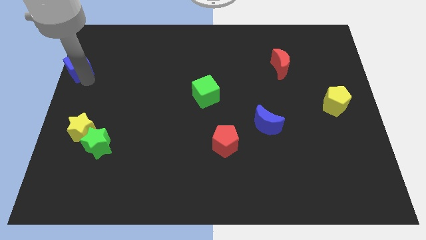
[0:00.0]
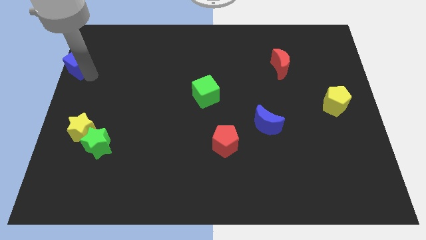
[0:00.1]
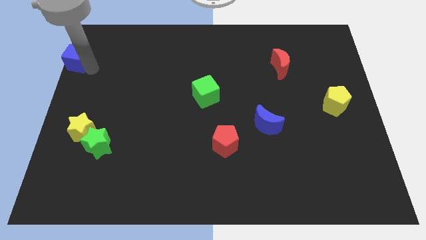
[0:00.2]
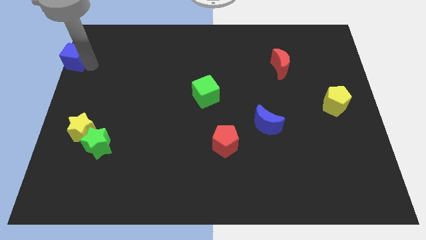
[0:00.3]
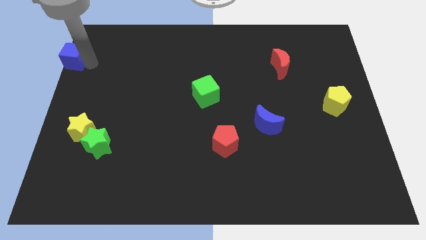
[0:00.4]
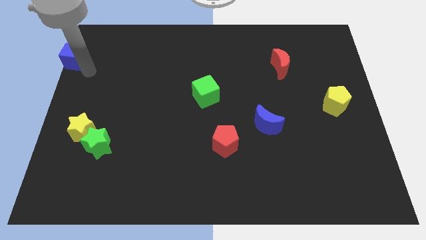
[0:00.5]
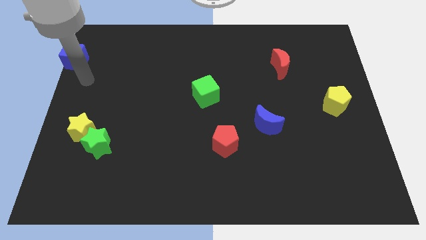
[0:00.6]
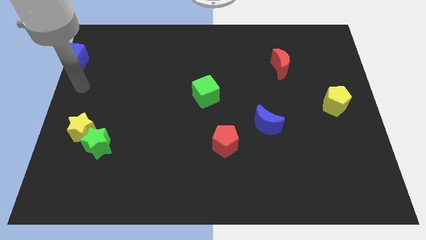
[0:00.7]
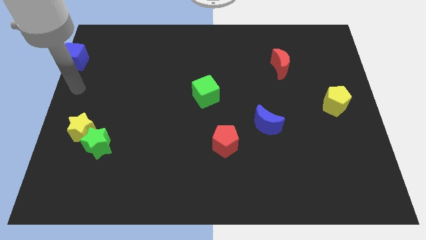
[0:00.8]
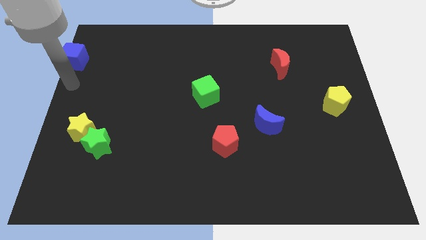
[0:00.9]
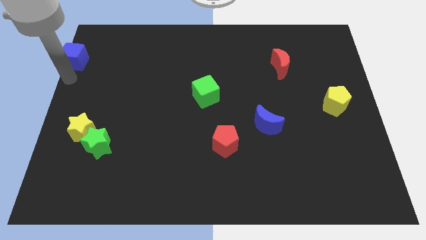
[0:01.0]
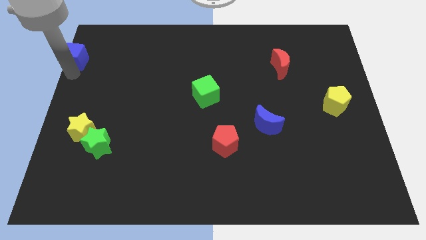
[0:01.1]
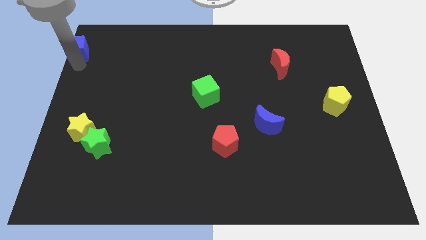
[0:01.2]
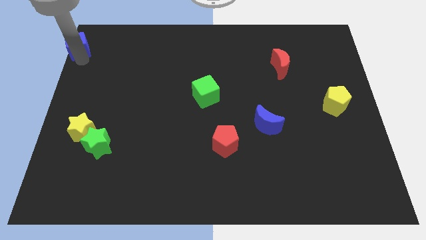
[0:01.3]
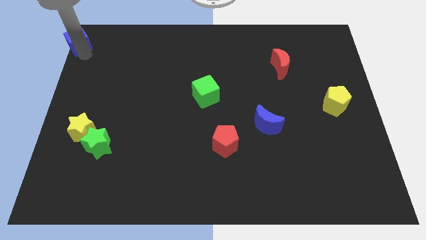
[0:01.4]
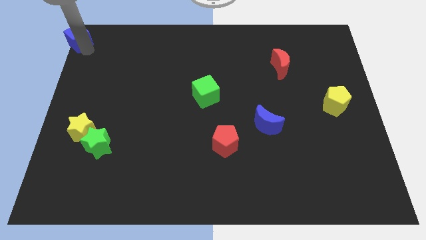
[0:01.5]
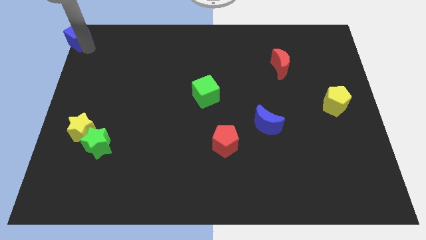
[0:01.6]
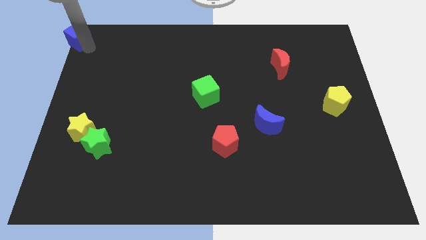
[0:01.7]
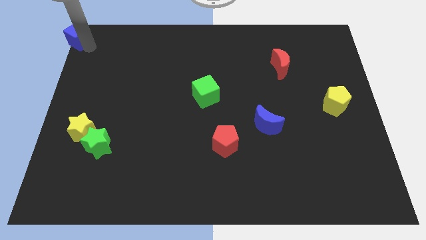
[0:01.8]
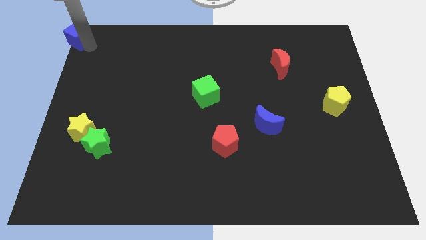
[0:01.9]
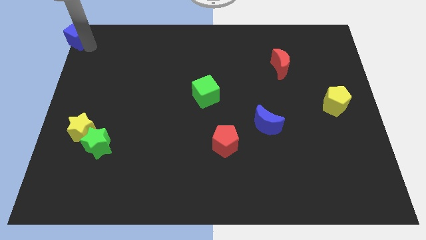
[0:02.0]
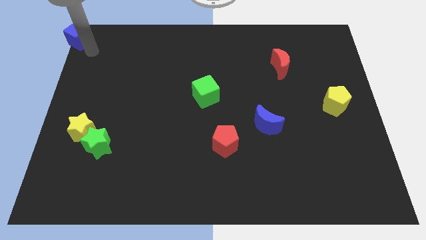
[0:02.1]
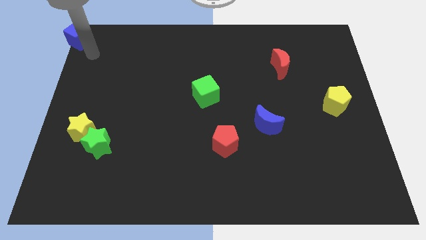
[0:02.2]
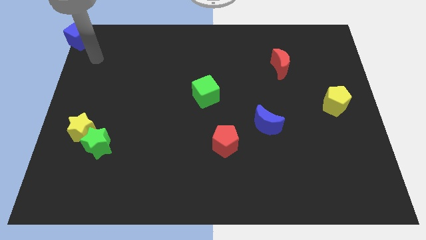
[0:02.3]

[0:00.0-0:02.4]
place the blue cube at the top left corner of the board

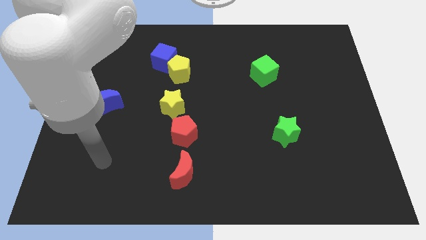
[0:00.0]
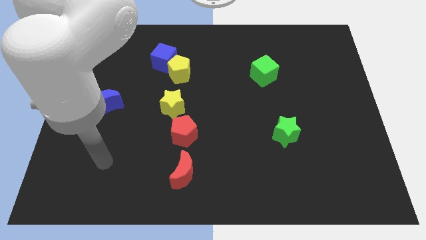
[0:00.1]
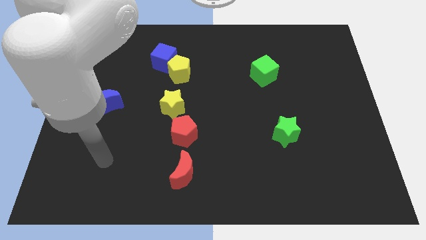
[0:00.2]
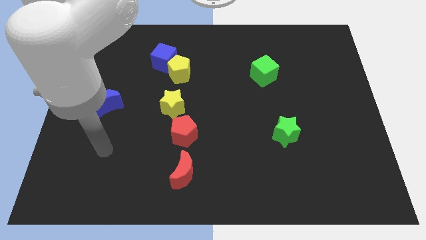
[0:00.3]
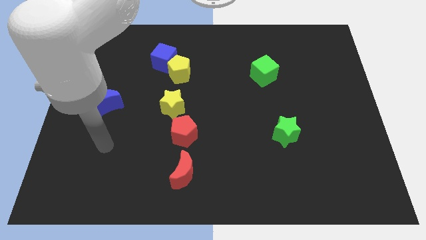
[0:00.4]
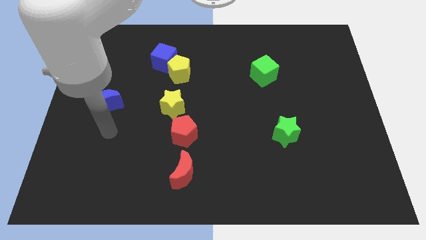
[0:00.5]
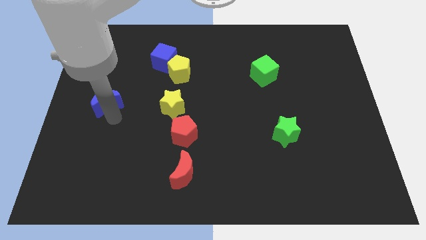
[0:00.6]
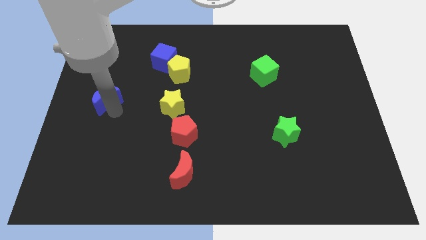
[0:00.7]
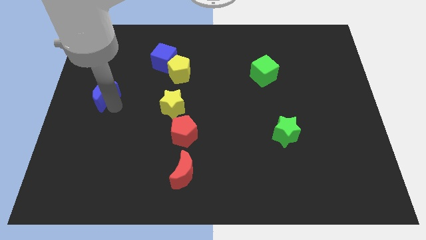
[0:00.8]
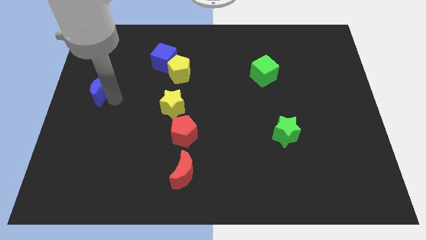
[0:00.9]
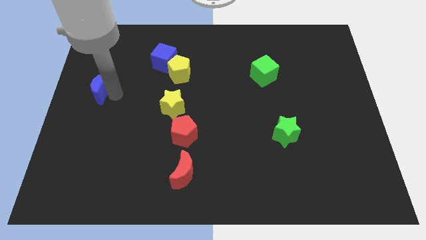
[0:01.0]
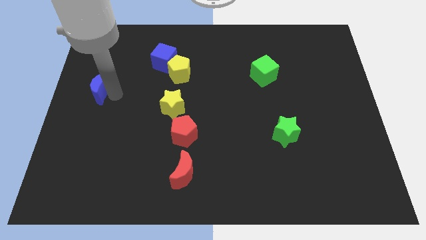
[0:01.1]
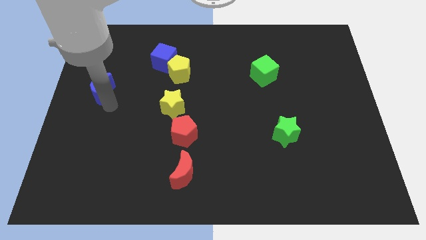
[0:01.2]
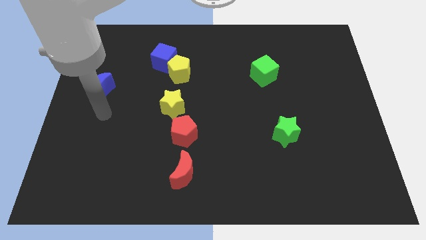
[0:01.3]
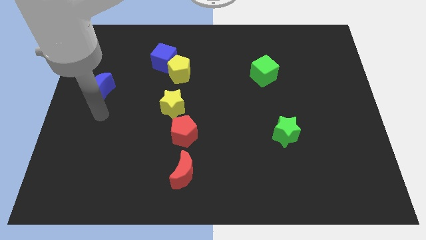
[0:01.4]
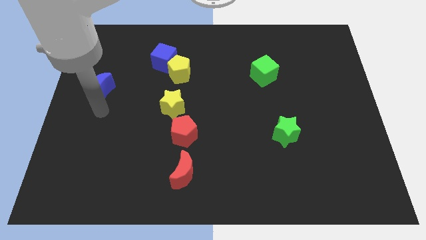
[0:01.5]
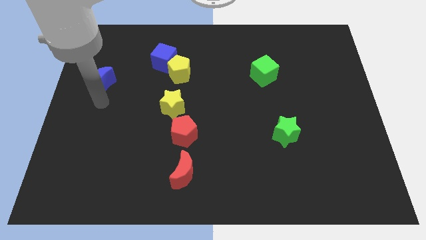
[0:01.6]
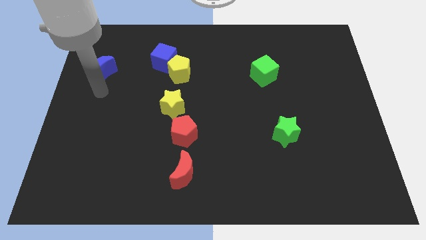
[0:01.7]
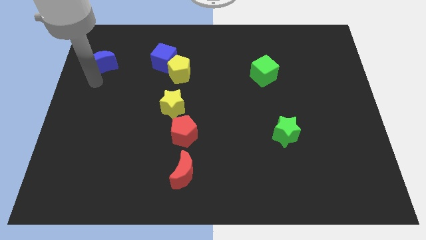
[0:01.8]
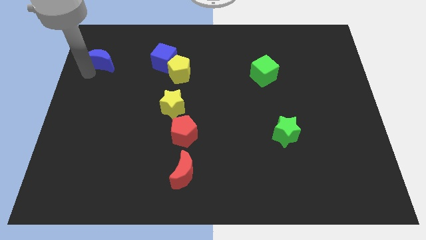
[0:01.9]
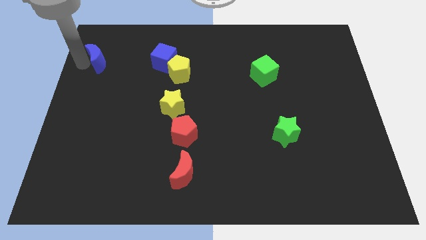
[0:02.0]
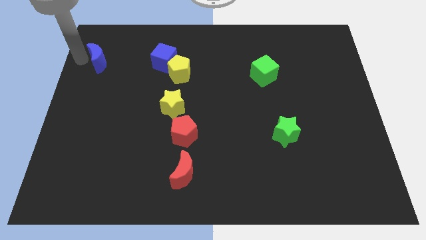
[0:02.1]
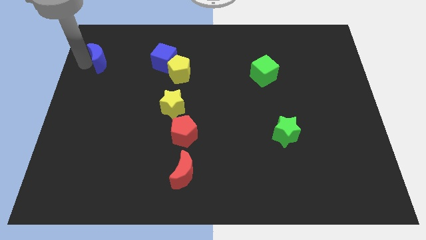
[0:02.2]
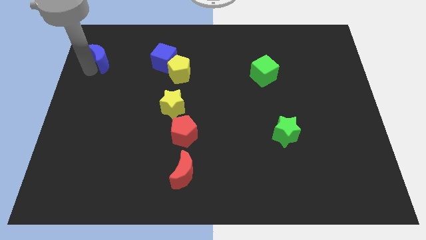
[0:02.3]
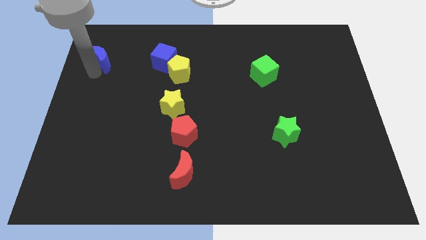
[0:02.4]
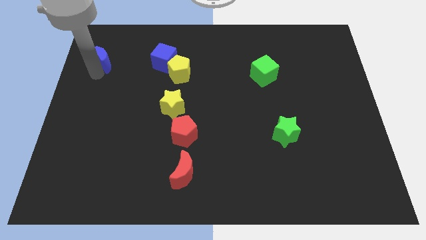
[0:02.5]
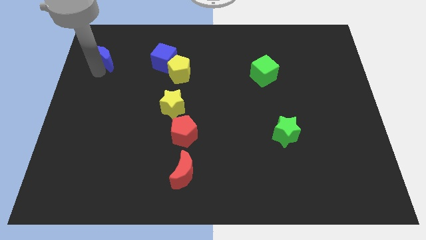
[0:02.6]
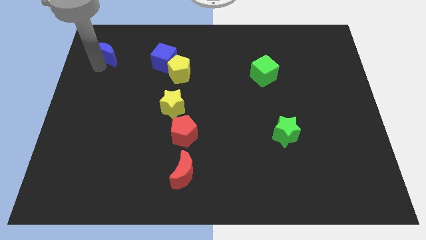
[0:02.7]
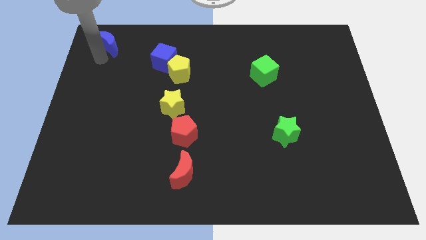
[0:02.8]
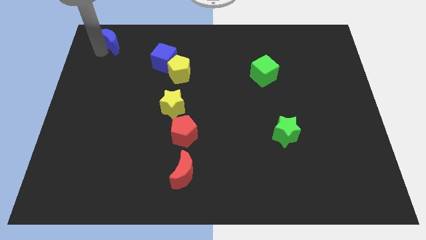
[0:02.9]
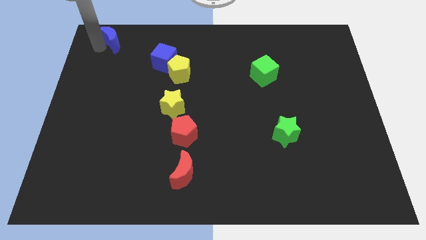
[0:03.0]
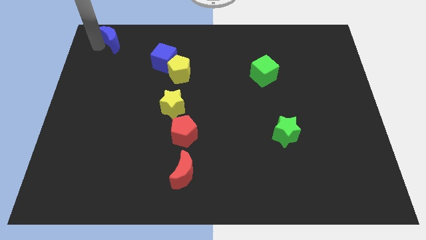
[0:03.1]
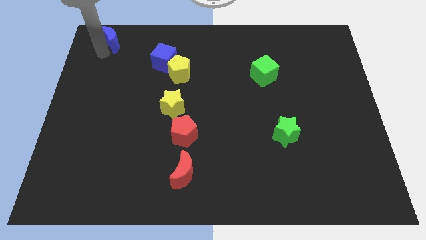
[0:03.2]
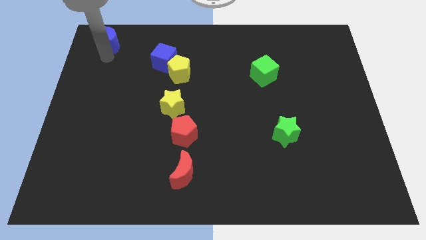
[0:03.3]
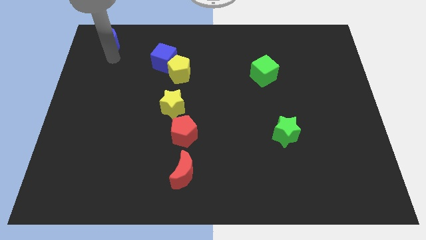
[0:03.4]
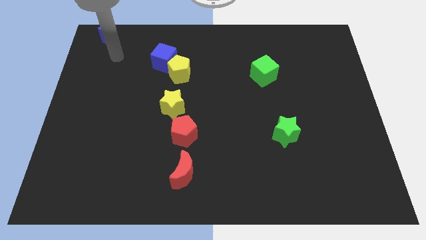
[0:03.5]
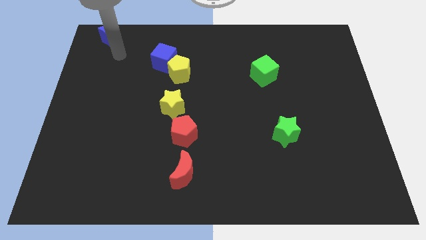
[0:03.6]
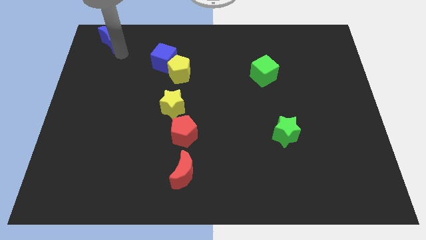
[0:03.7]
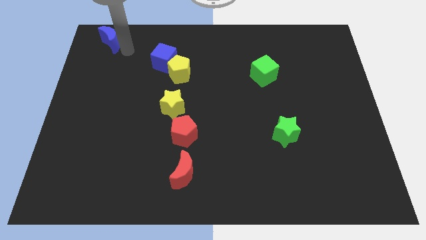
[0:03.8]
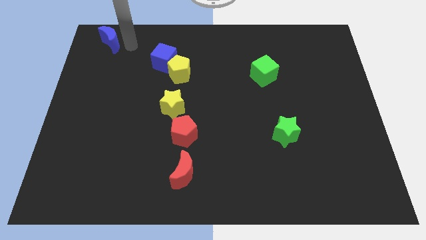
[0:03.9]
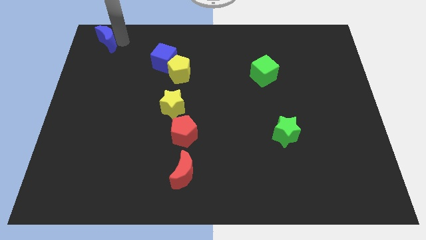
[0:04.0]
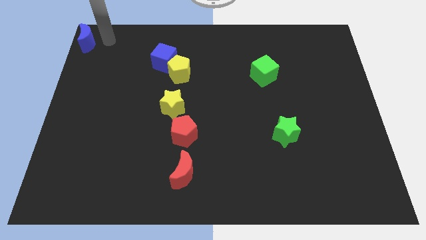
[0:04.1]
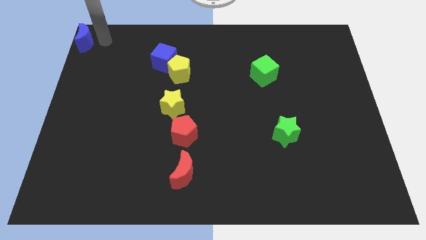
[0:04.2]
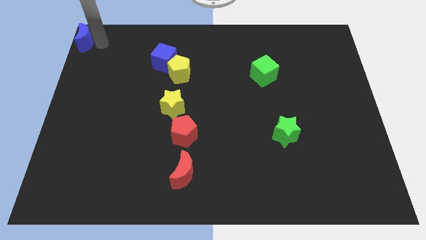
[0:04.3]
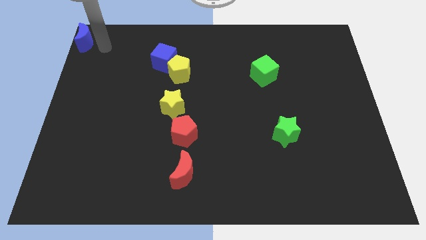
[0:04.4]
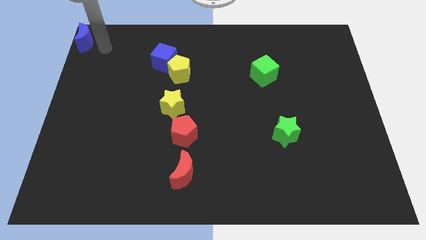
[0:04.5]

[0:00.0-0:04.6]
place the blue moon at the top left corner of the board

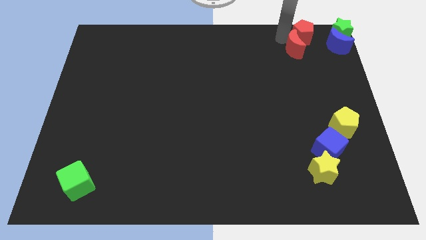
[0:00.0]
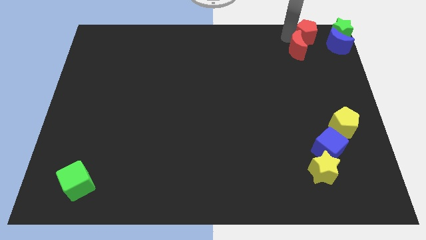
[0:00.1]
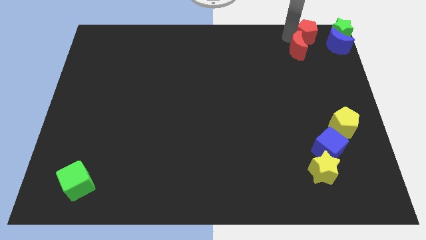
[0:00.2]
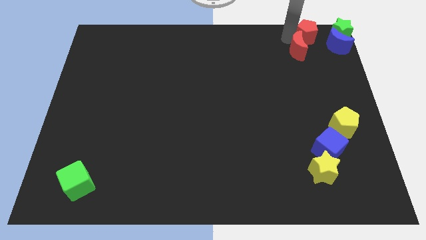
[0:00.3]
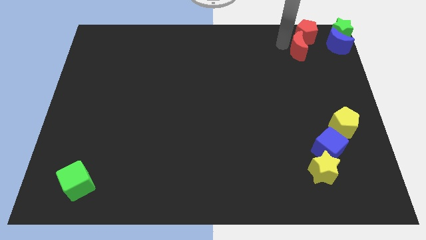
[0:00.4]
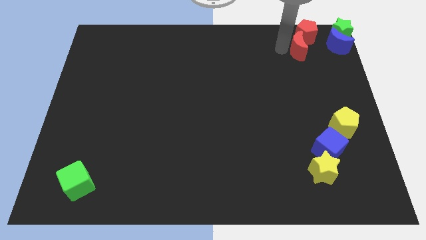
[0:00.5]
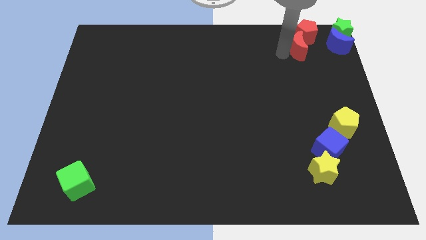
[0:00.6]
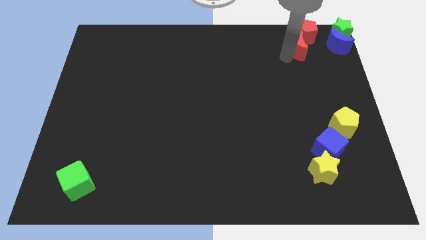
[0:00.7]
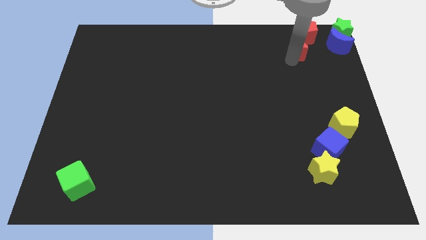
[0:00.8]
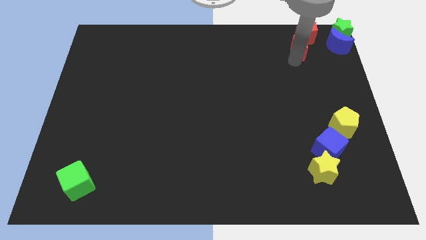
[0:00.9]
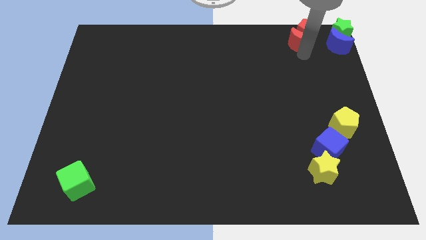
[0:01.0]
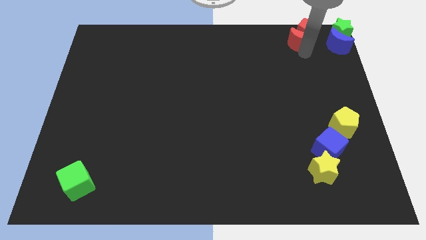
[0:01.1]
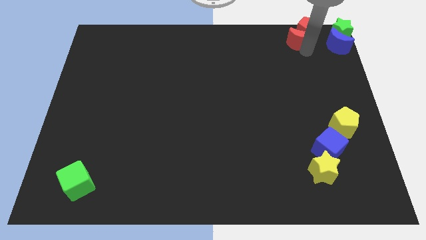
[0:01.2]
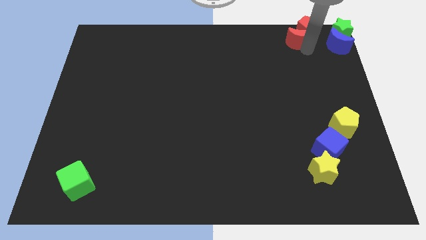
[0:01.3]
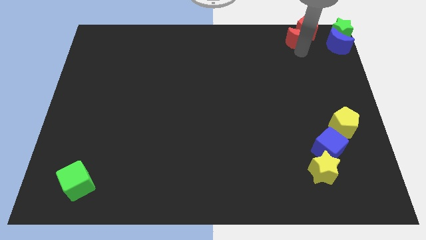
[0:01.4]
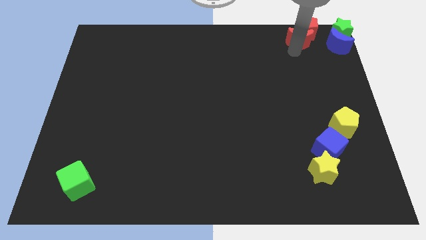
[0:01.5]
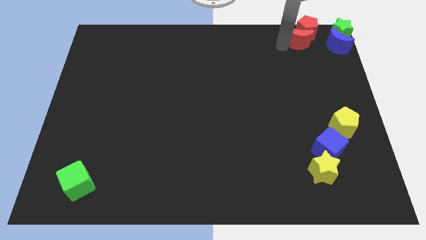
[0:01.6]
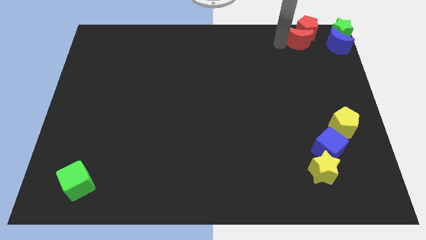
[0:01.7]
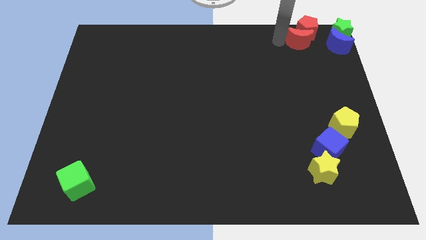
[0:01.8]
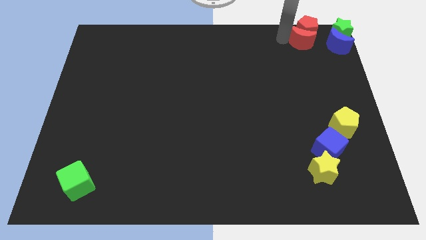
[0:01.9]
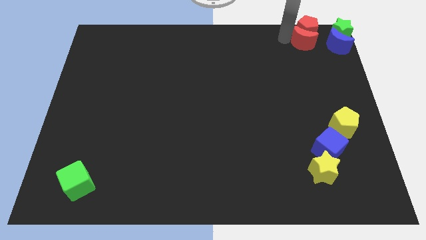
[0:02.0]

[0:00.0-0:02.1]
move the red half and red pentagon to the top right corner
